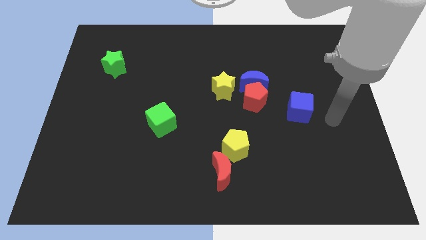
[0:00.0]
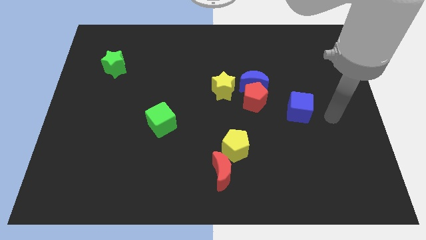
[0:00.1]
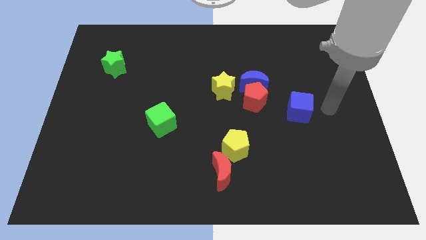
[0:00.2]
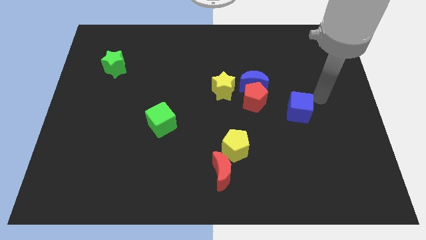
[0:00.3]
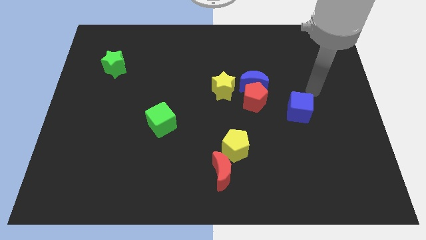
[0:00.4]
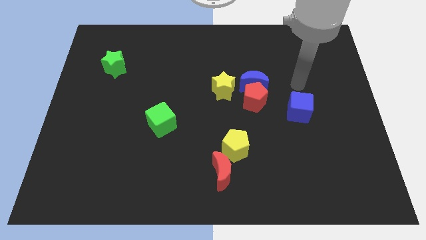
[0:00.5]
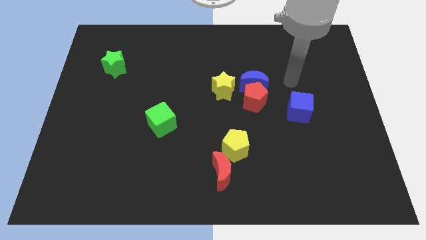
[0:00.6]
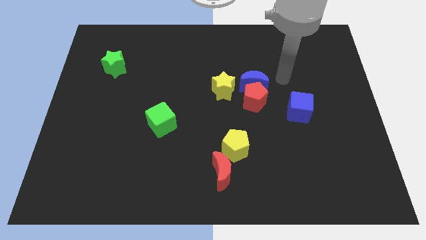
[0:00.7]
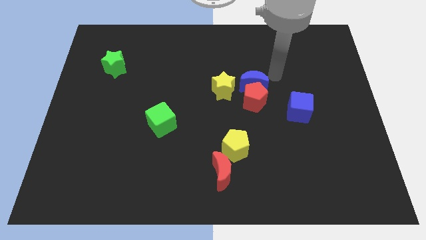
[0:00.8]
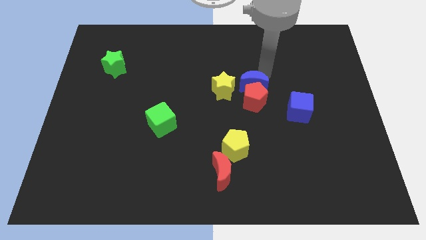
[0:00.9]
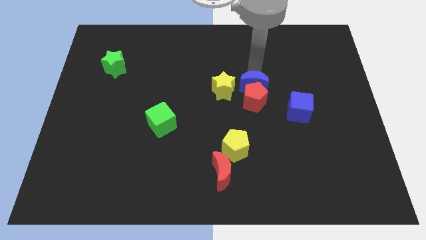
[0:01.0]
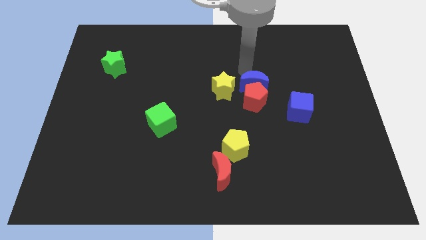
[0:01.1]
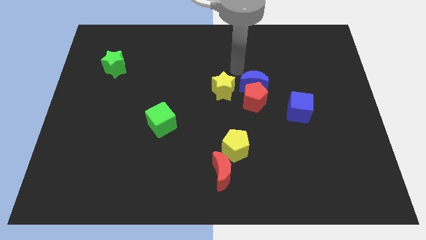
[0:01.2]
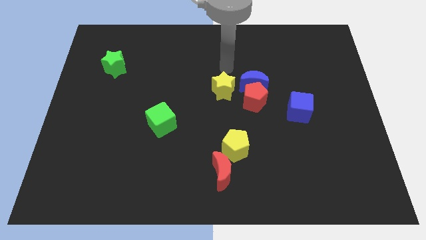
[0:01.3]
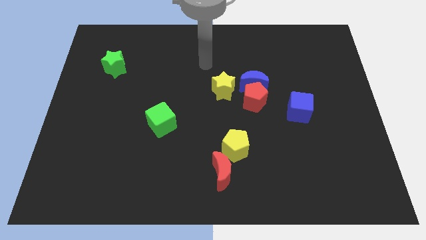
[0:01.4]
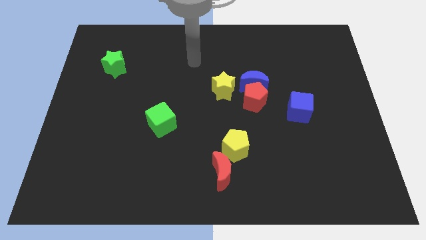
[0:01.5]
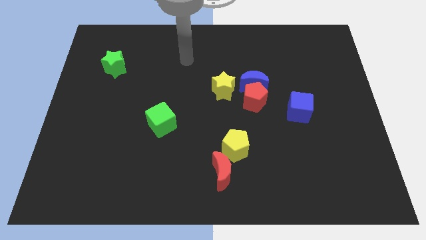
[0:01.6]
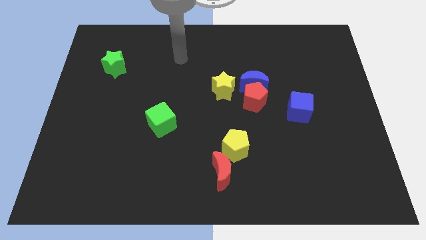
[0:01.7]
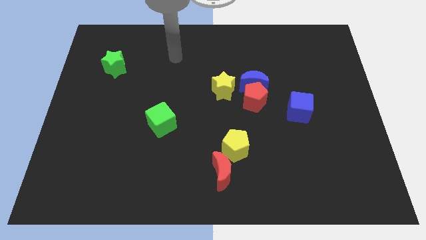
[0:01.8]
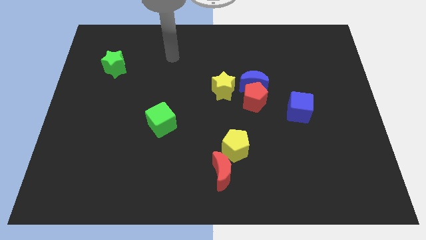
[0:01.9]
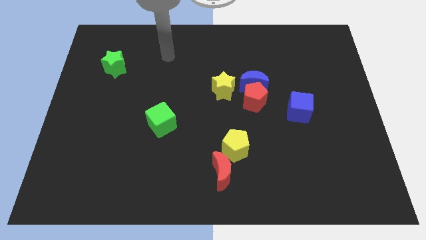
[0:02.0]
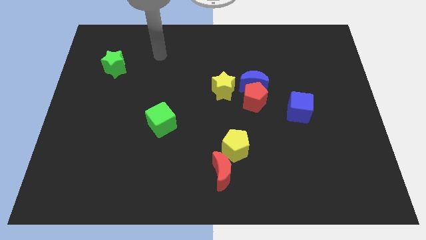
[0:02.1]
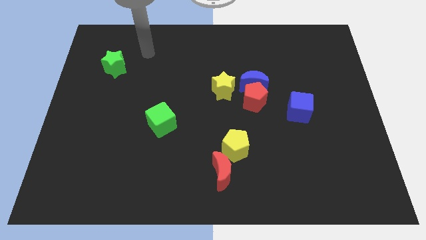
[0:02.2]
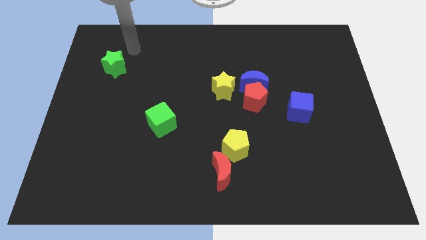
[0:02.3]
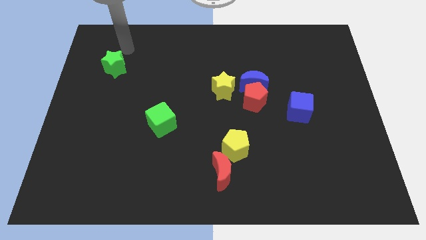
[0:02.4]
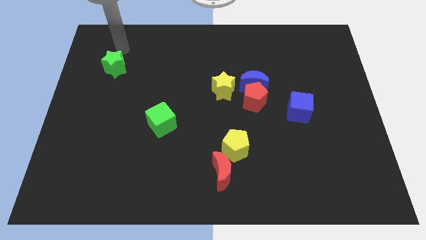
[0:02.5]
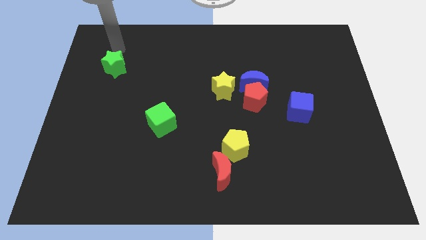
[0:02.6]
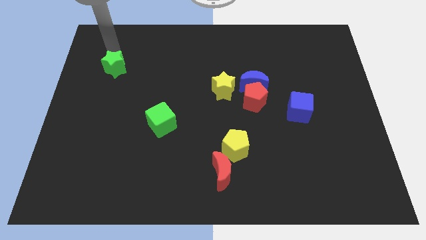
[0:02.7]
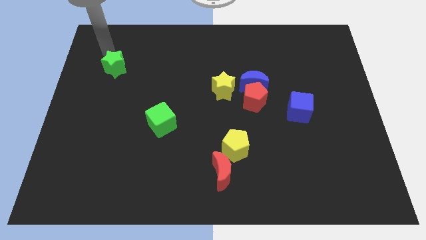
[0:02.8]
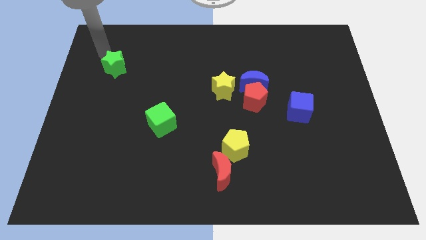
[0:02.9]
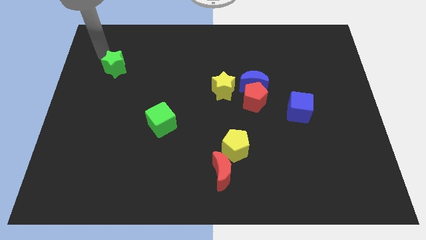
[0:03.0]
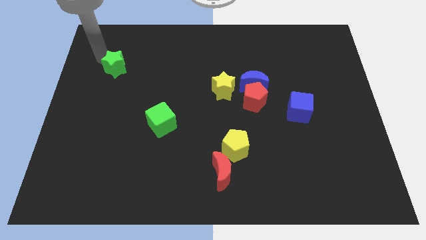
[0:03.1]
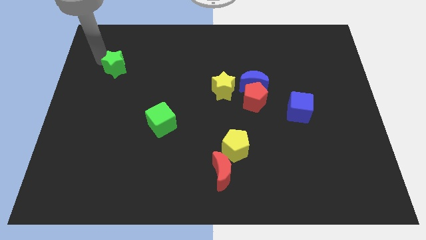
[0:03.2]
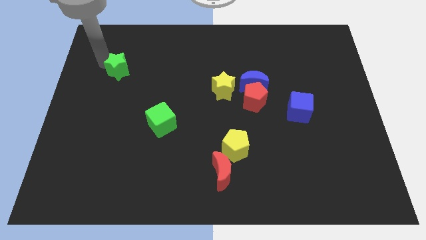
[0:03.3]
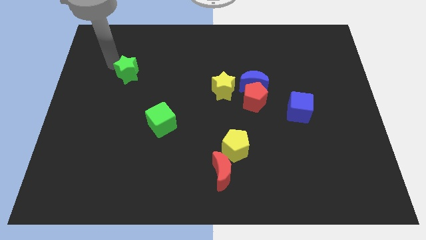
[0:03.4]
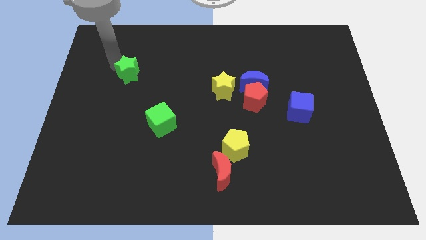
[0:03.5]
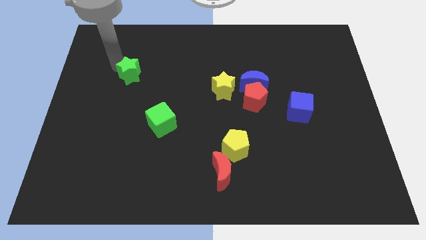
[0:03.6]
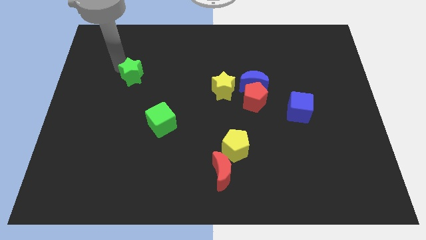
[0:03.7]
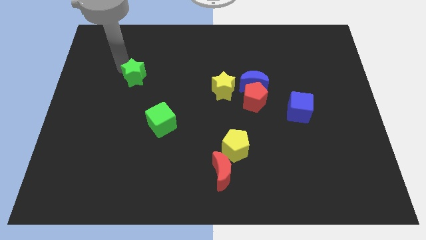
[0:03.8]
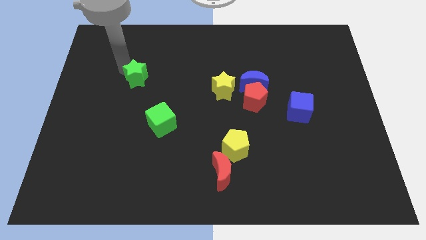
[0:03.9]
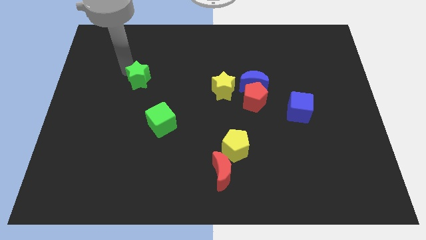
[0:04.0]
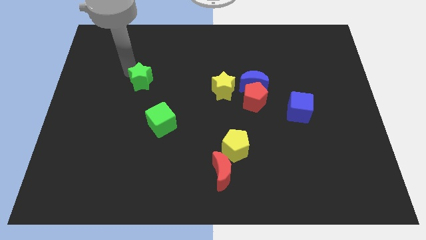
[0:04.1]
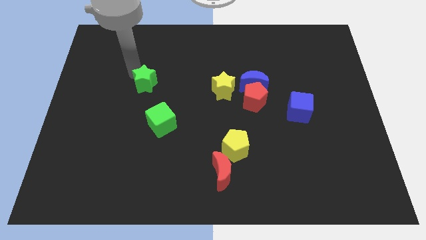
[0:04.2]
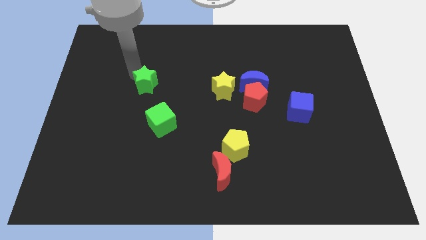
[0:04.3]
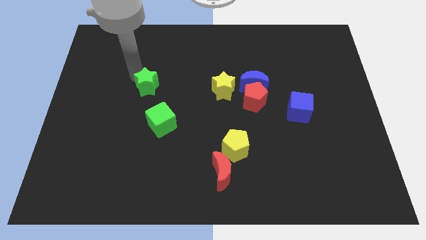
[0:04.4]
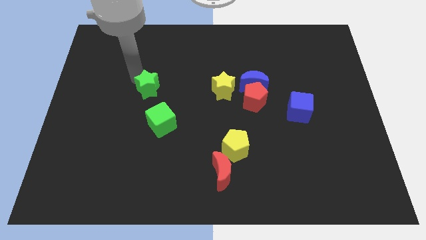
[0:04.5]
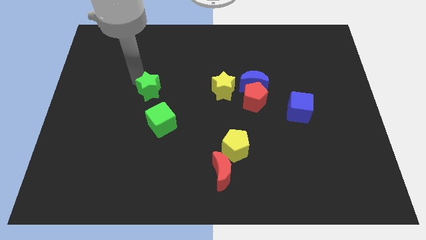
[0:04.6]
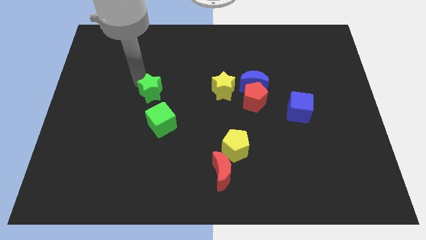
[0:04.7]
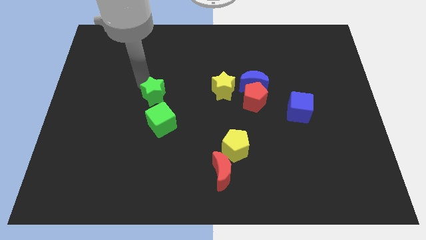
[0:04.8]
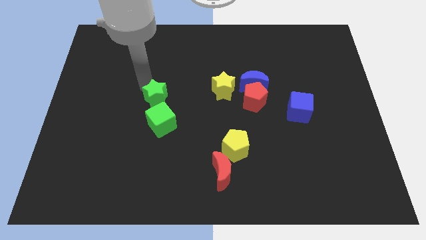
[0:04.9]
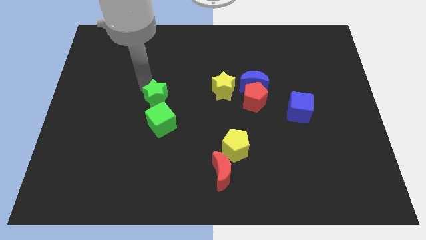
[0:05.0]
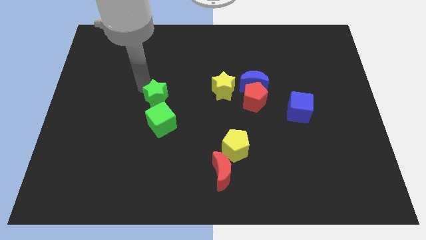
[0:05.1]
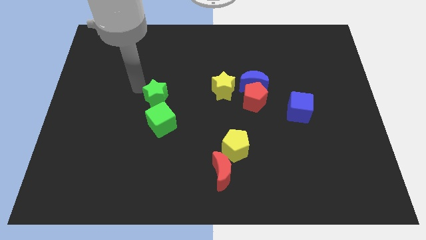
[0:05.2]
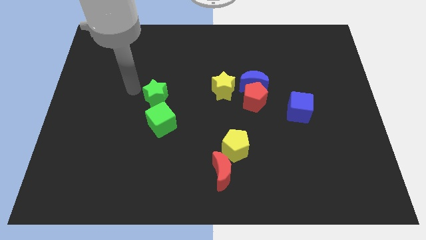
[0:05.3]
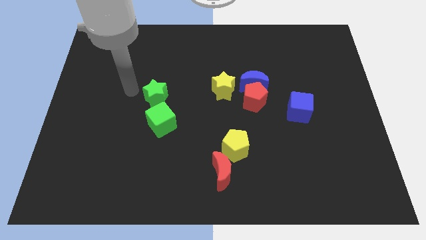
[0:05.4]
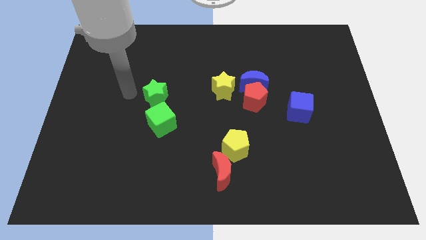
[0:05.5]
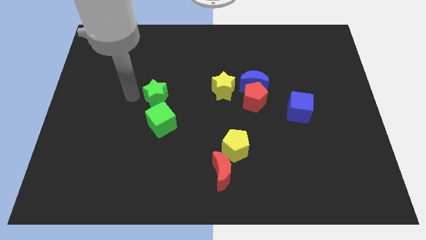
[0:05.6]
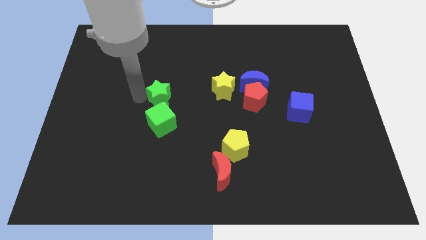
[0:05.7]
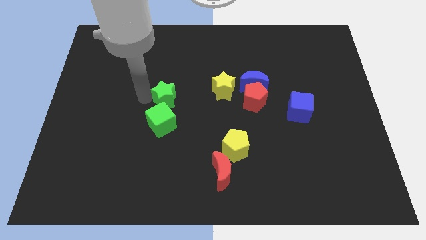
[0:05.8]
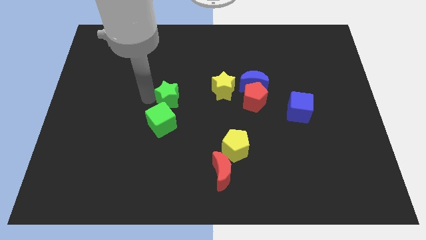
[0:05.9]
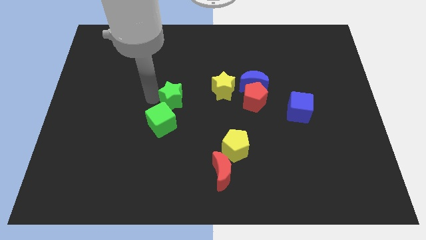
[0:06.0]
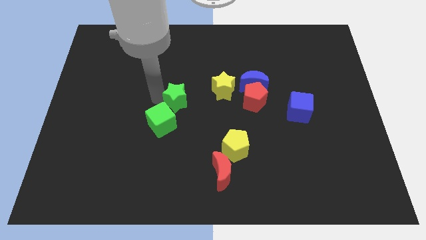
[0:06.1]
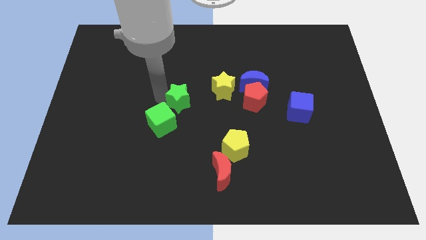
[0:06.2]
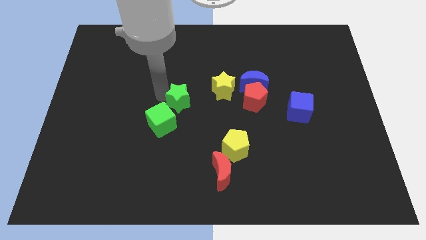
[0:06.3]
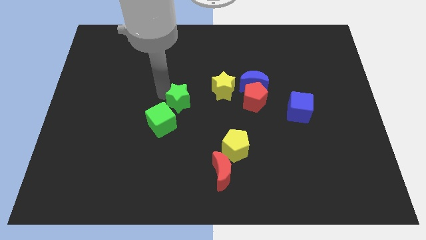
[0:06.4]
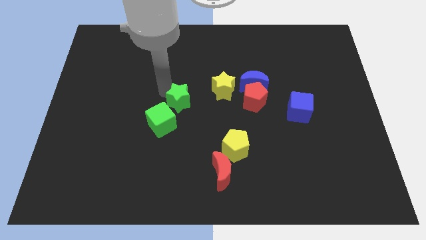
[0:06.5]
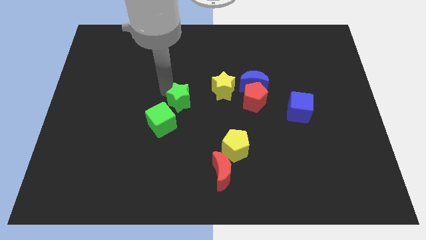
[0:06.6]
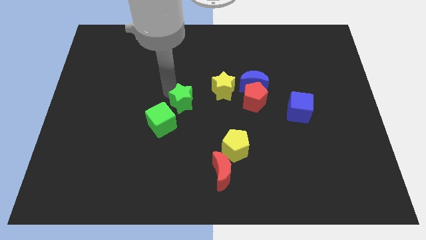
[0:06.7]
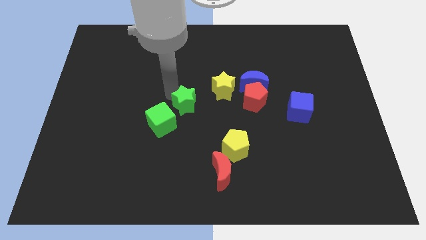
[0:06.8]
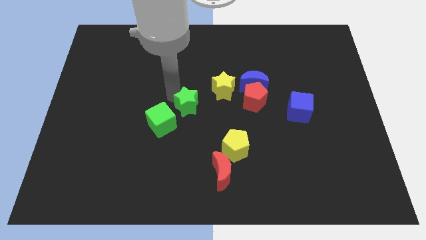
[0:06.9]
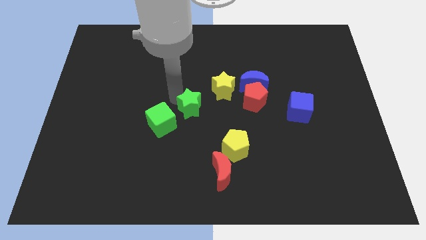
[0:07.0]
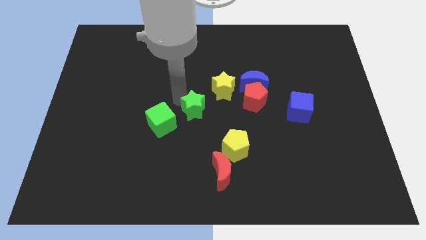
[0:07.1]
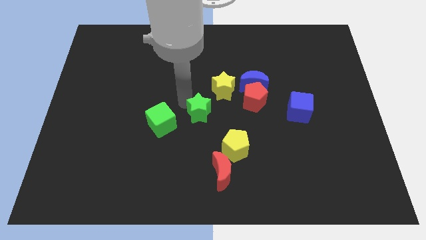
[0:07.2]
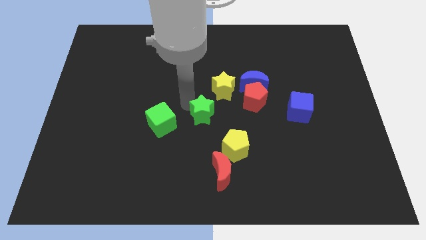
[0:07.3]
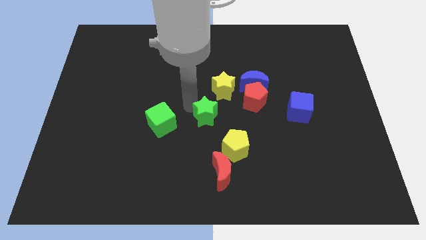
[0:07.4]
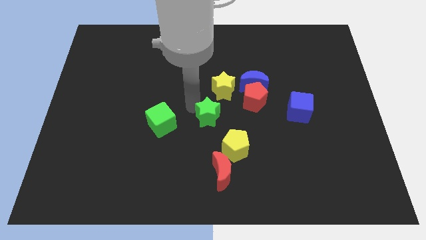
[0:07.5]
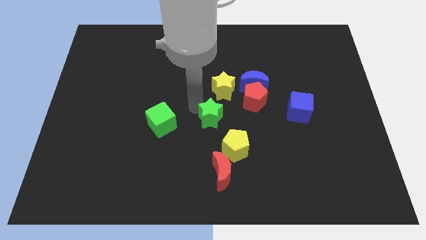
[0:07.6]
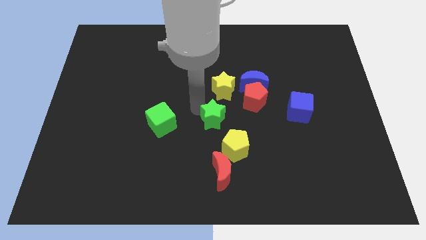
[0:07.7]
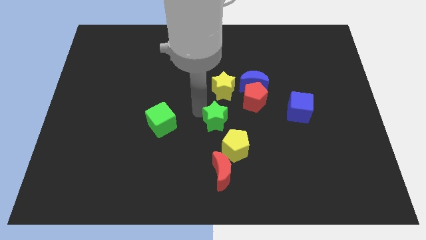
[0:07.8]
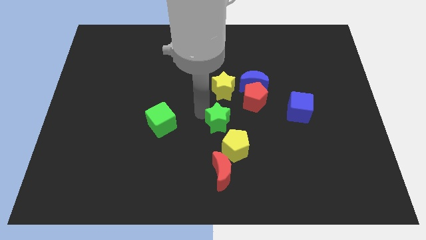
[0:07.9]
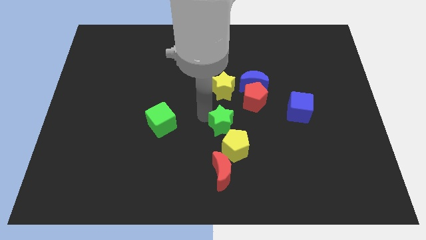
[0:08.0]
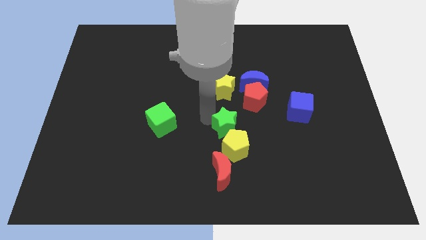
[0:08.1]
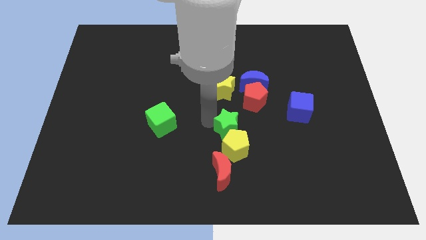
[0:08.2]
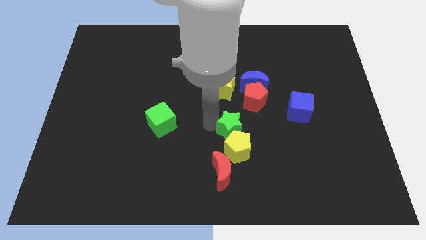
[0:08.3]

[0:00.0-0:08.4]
move the green star towards the yellow pentagon

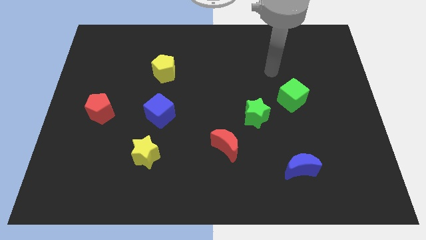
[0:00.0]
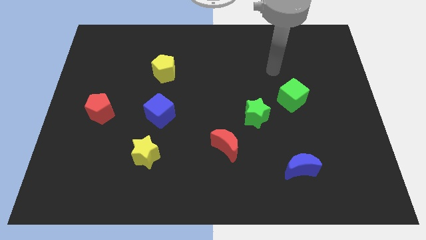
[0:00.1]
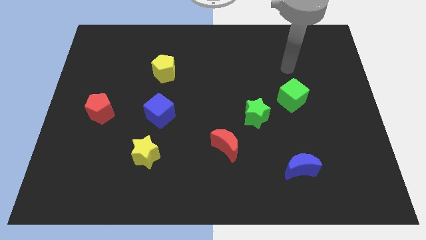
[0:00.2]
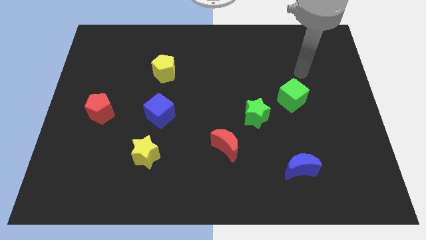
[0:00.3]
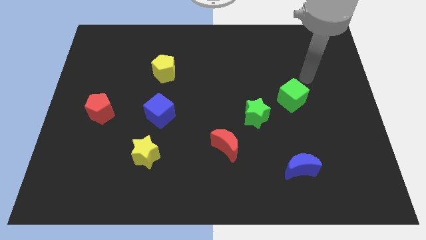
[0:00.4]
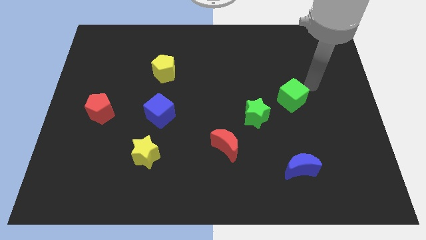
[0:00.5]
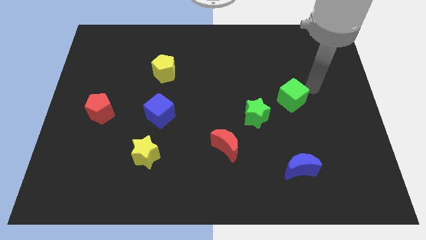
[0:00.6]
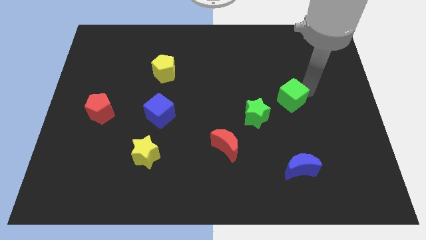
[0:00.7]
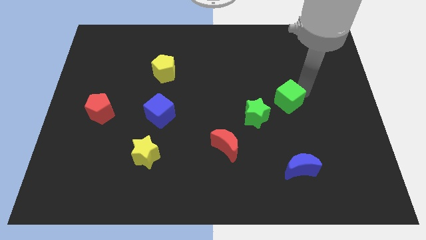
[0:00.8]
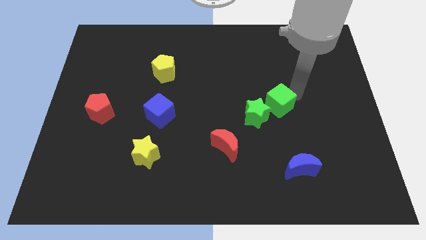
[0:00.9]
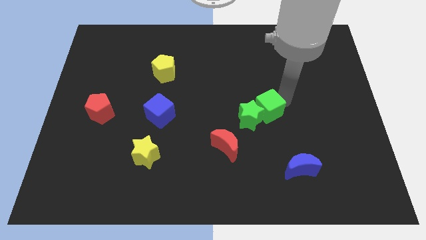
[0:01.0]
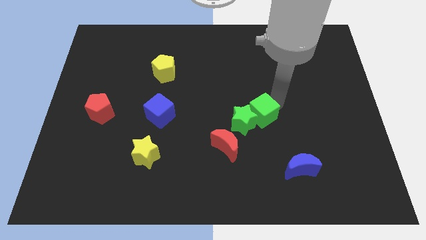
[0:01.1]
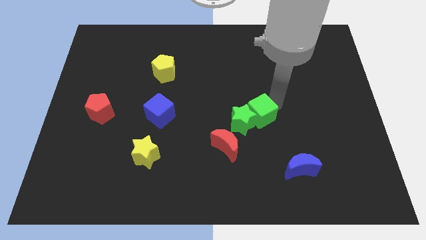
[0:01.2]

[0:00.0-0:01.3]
move the green cube next to the green star
